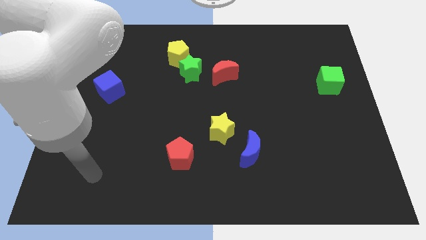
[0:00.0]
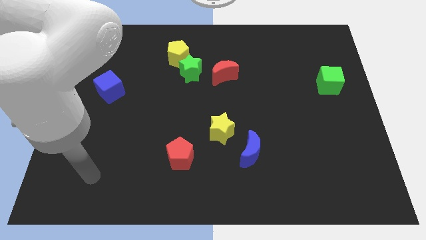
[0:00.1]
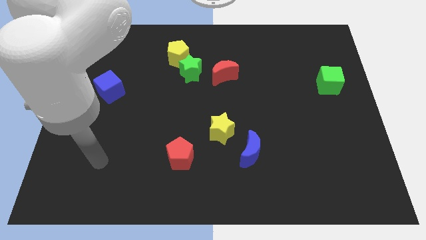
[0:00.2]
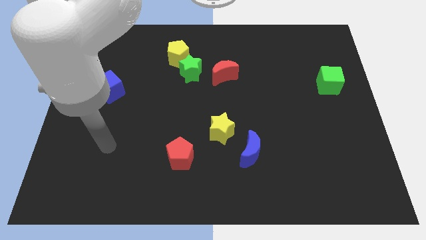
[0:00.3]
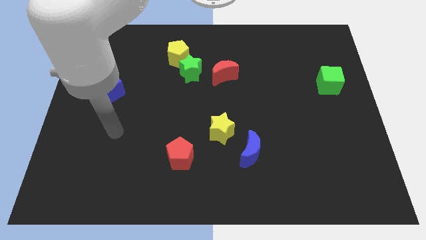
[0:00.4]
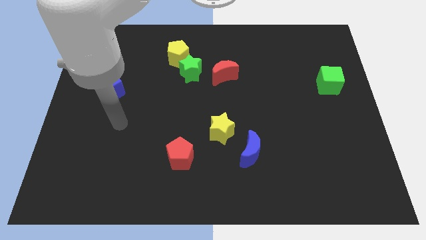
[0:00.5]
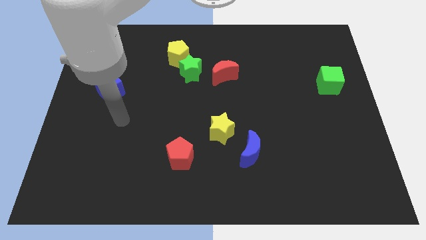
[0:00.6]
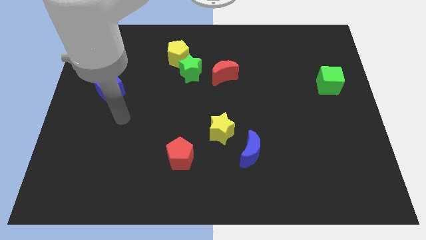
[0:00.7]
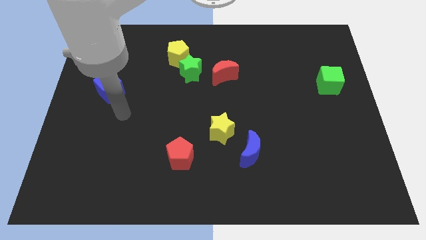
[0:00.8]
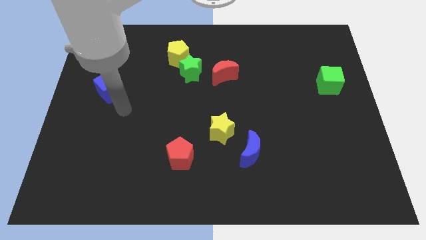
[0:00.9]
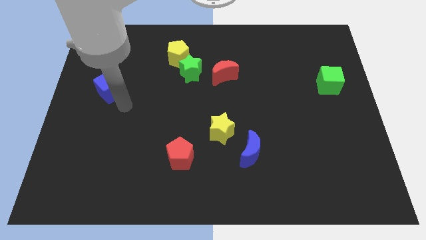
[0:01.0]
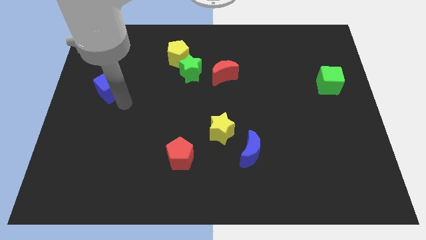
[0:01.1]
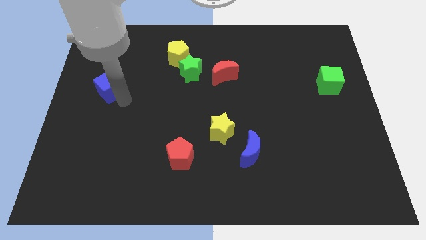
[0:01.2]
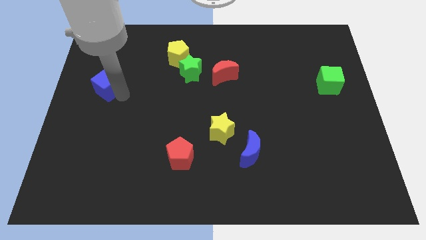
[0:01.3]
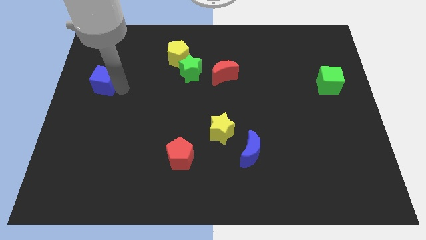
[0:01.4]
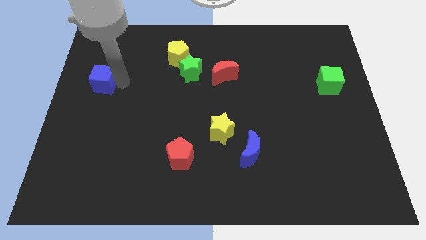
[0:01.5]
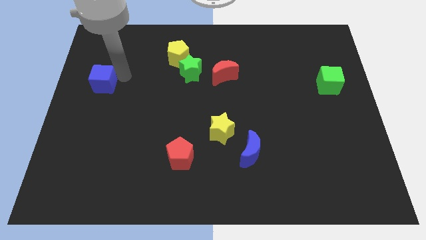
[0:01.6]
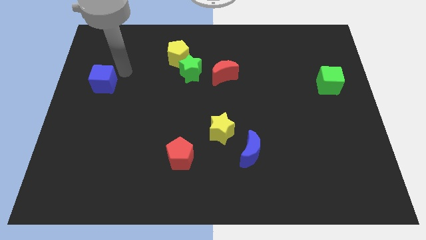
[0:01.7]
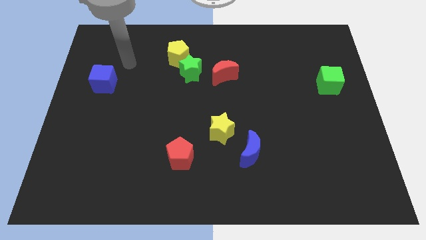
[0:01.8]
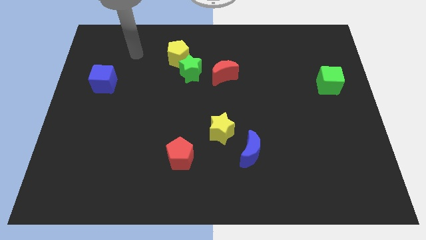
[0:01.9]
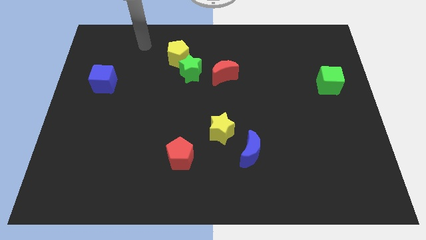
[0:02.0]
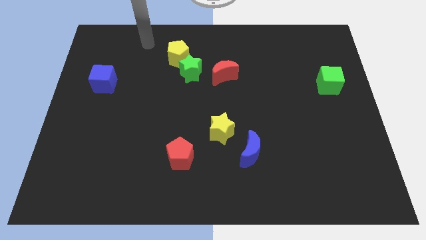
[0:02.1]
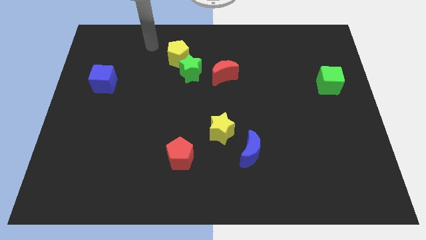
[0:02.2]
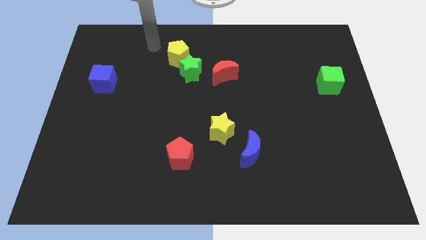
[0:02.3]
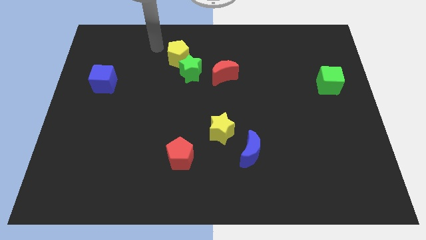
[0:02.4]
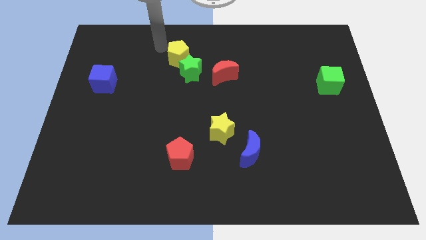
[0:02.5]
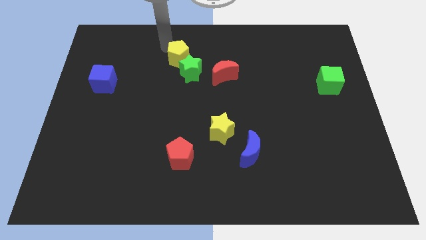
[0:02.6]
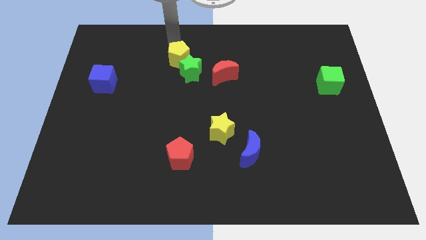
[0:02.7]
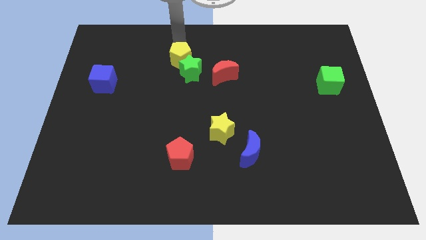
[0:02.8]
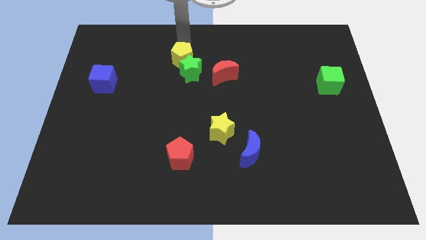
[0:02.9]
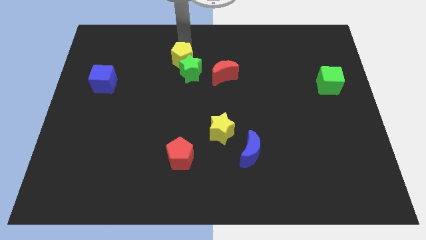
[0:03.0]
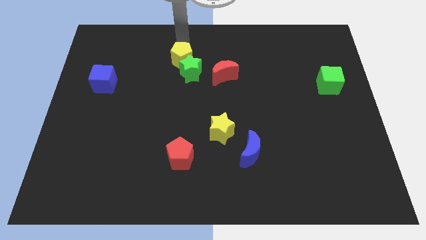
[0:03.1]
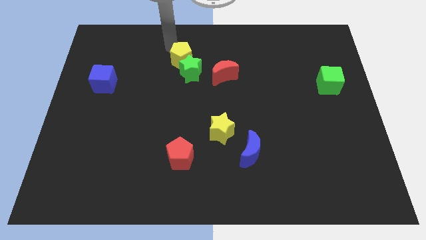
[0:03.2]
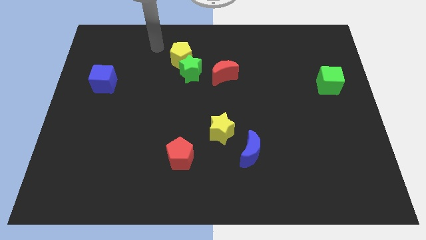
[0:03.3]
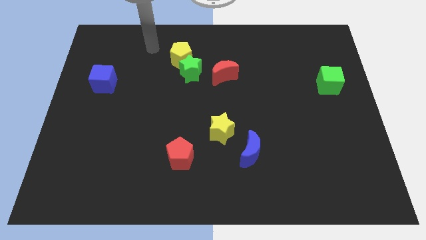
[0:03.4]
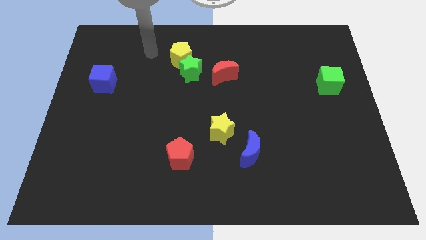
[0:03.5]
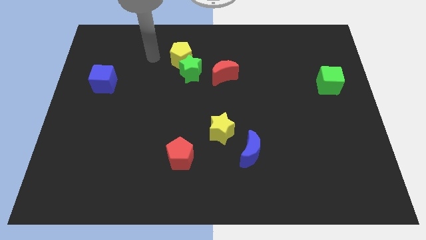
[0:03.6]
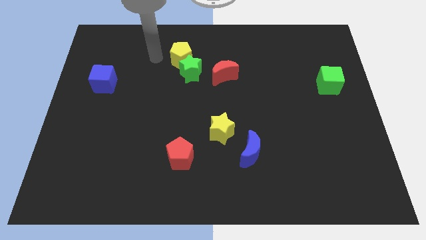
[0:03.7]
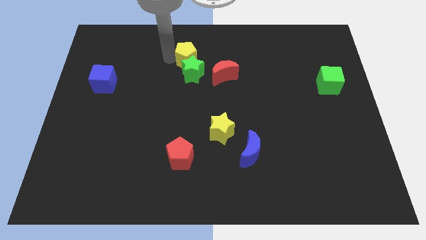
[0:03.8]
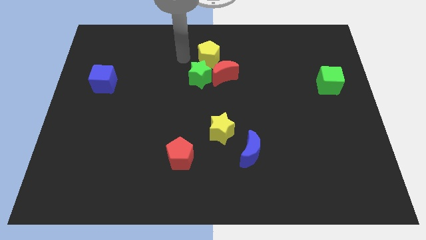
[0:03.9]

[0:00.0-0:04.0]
push the yellow pentagon top center

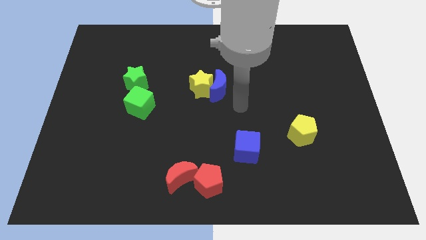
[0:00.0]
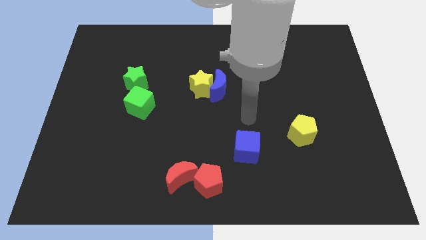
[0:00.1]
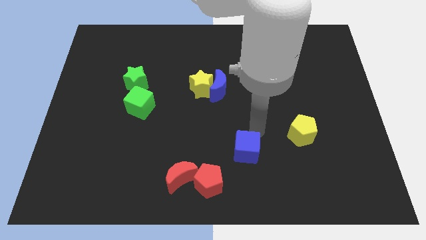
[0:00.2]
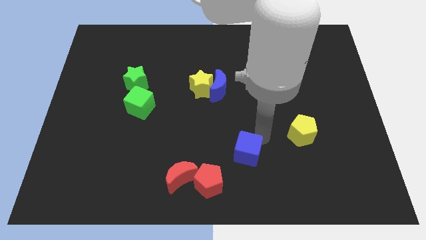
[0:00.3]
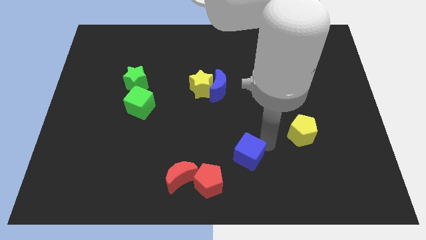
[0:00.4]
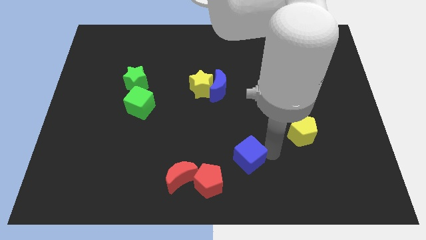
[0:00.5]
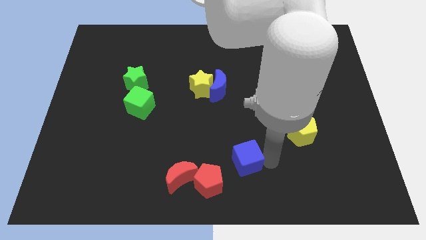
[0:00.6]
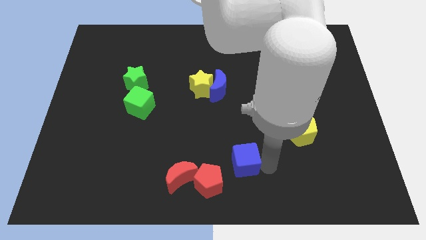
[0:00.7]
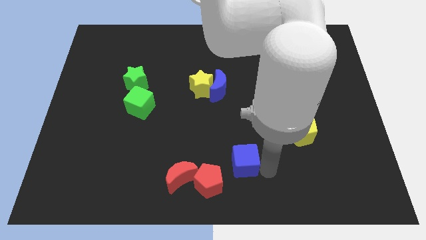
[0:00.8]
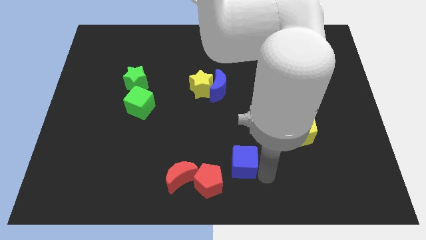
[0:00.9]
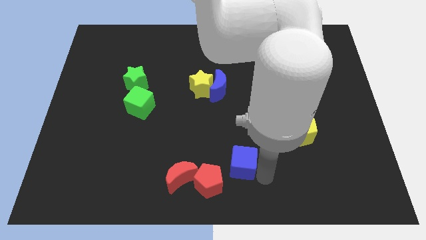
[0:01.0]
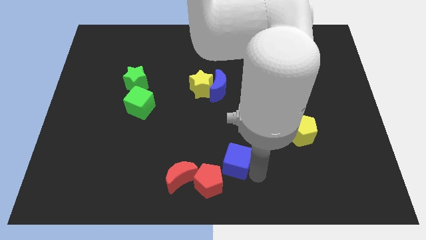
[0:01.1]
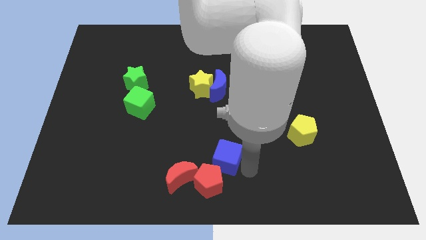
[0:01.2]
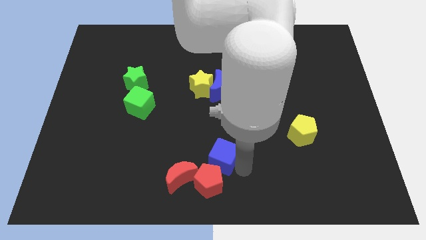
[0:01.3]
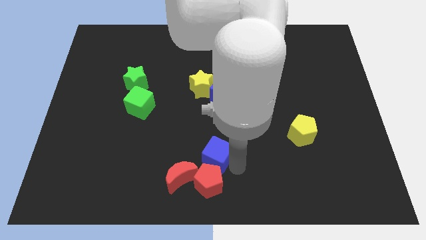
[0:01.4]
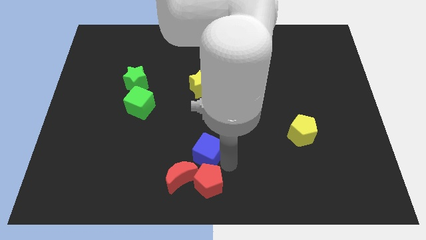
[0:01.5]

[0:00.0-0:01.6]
place the blue cube above the red pentagon

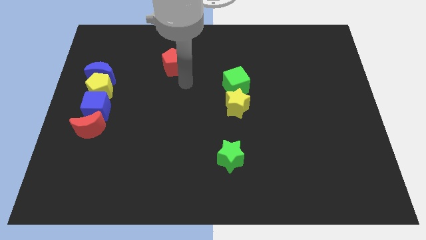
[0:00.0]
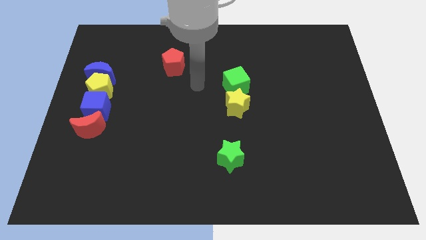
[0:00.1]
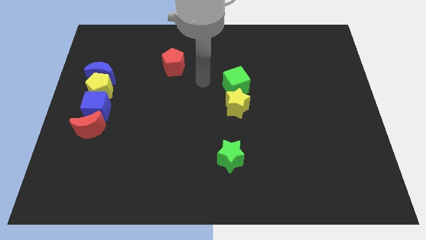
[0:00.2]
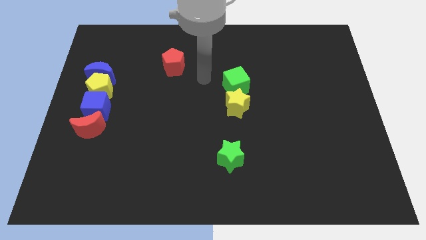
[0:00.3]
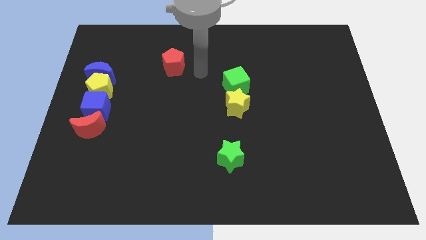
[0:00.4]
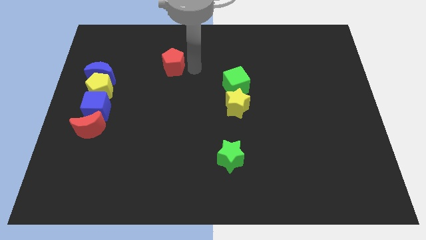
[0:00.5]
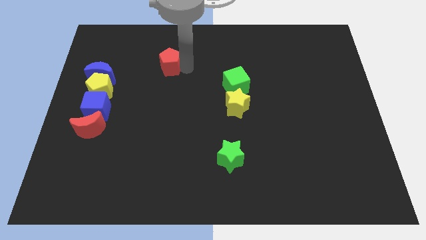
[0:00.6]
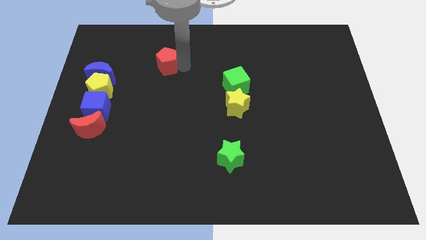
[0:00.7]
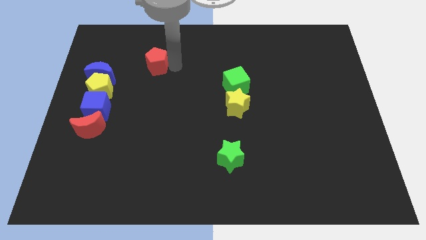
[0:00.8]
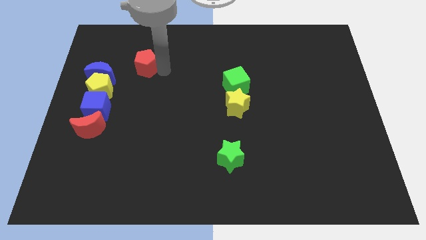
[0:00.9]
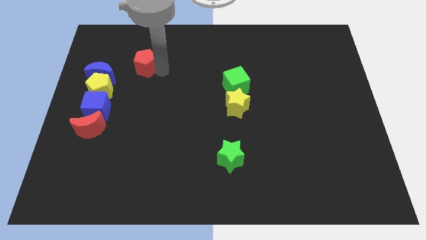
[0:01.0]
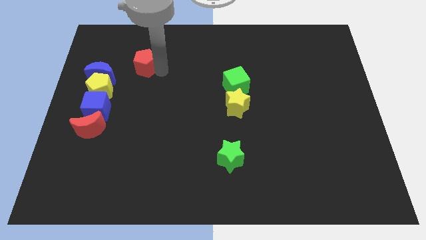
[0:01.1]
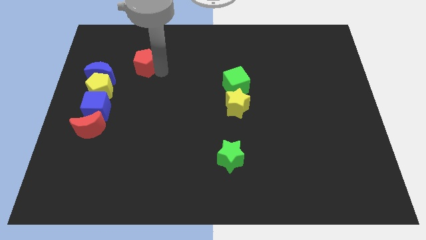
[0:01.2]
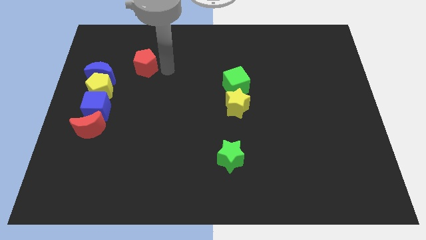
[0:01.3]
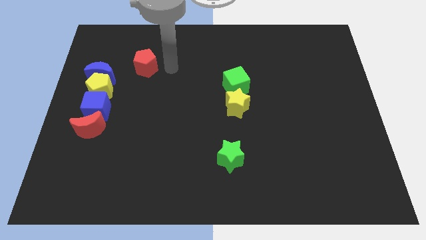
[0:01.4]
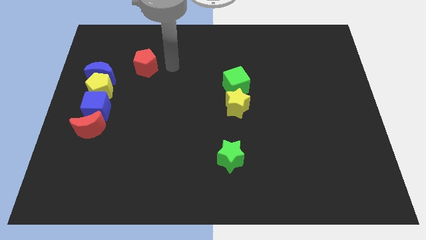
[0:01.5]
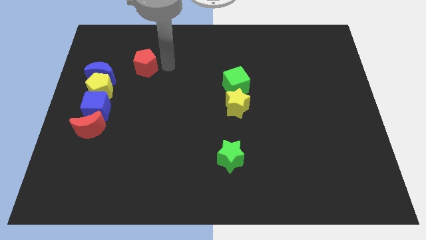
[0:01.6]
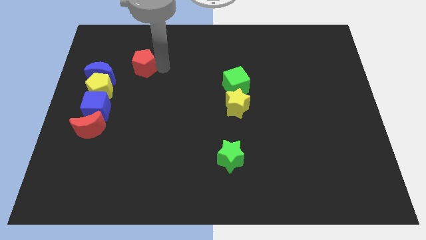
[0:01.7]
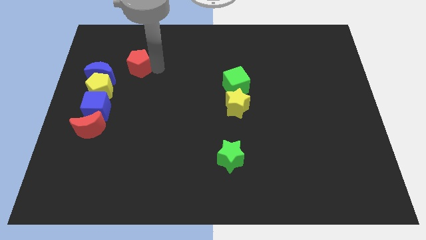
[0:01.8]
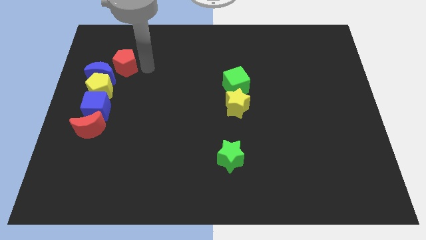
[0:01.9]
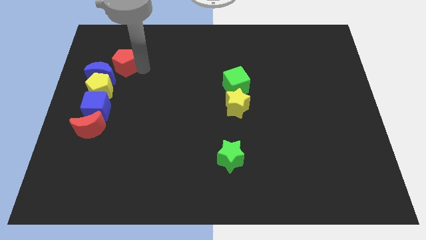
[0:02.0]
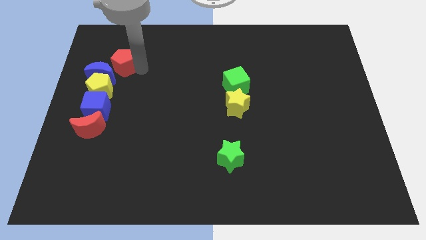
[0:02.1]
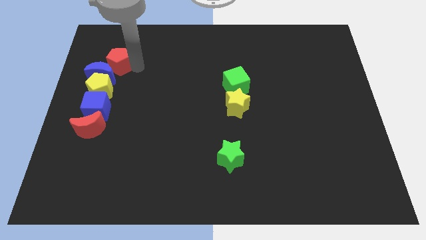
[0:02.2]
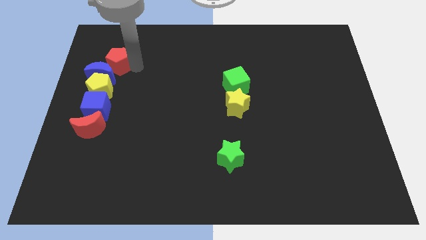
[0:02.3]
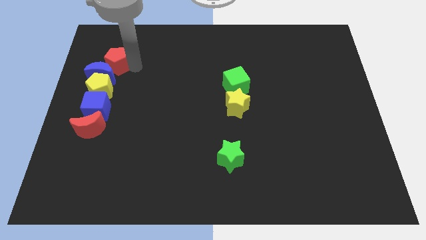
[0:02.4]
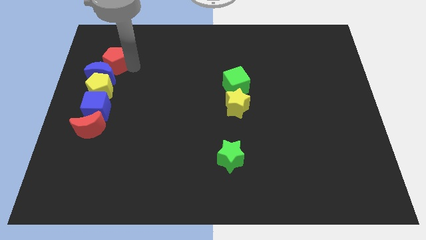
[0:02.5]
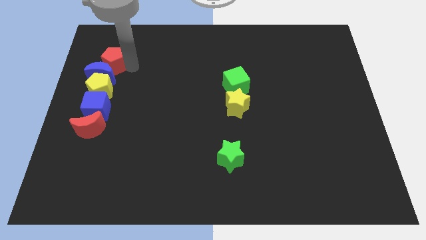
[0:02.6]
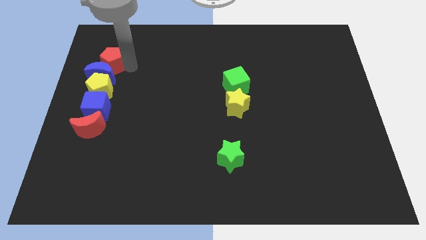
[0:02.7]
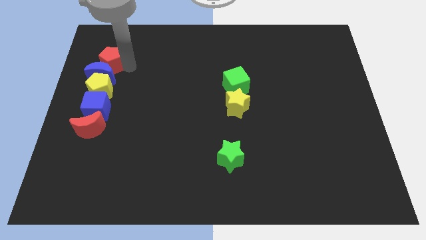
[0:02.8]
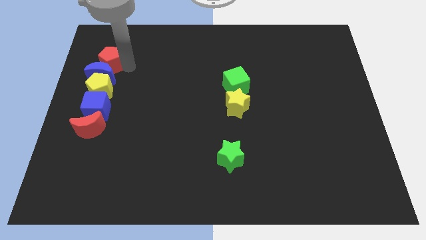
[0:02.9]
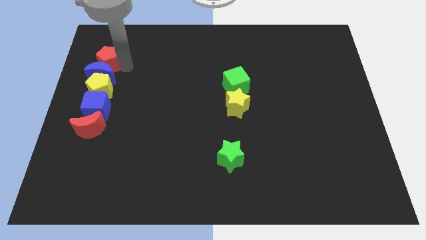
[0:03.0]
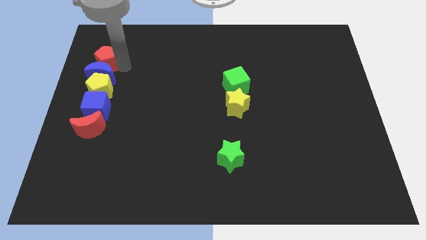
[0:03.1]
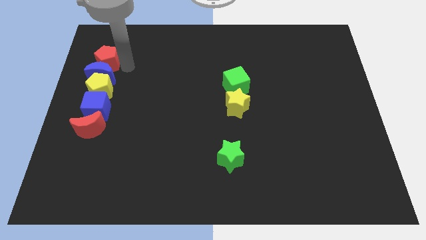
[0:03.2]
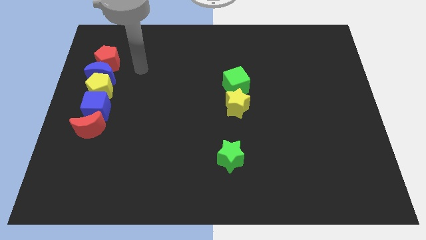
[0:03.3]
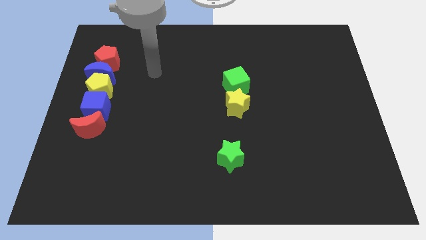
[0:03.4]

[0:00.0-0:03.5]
place the red pentagon to the top of the blue moon
